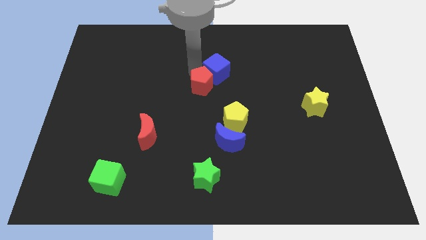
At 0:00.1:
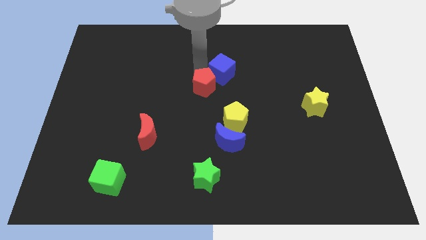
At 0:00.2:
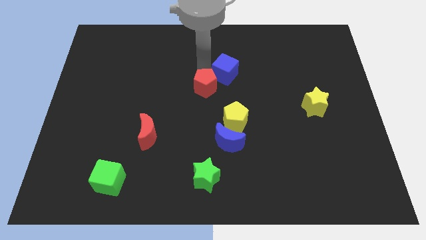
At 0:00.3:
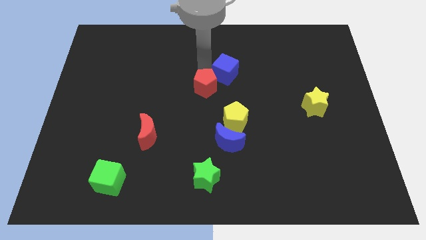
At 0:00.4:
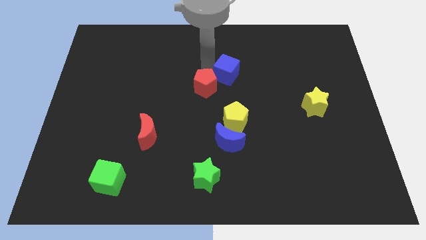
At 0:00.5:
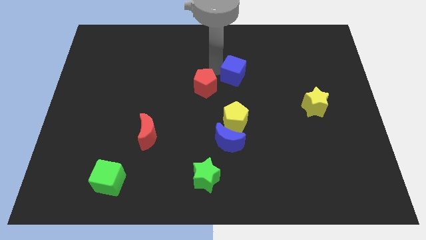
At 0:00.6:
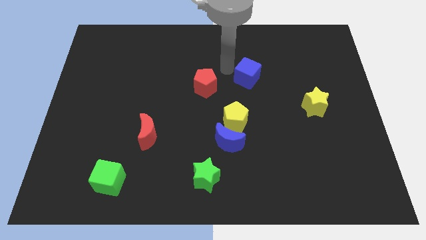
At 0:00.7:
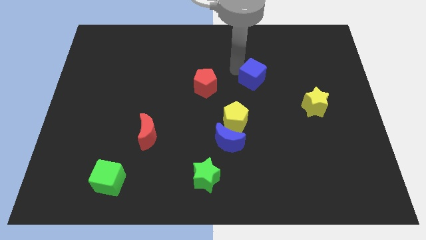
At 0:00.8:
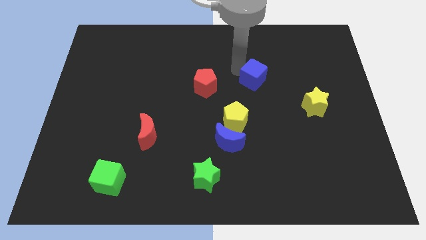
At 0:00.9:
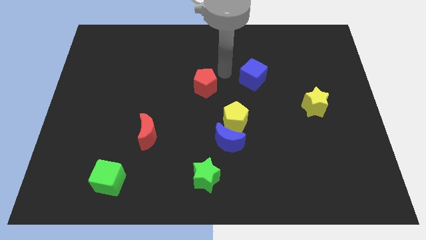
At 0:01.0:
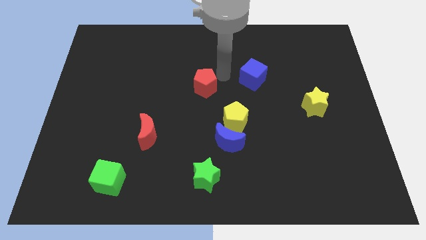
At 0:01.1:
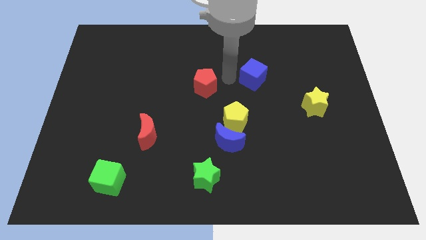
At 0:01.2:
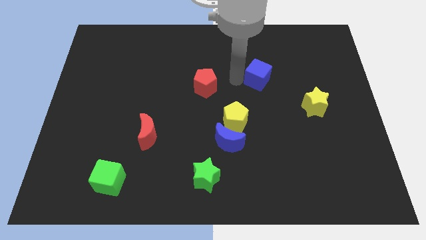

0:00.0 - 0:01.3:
separate blue cube from red pentagon

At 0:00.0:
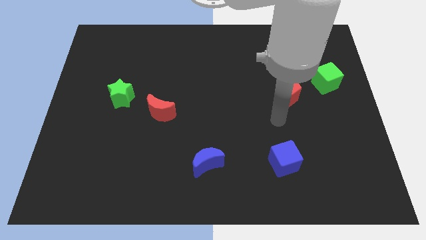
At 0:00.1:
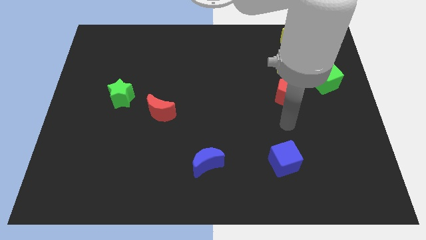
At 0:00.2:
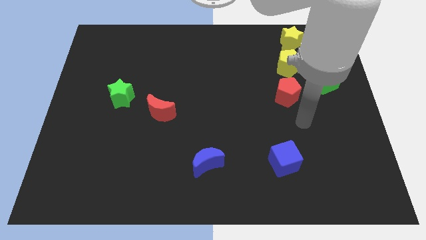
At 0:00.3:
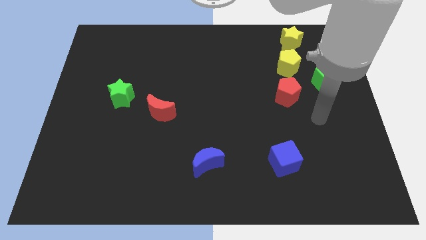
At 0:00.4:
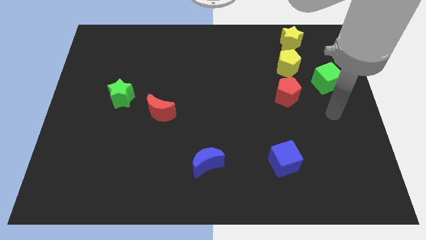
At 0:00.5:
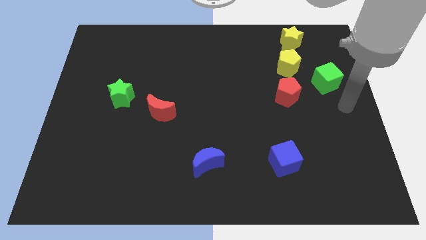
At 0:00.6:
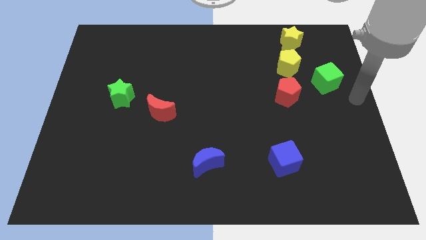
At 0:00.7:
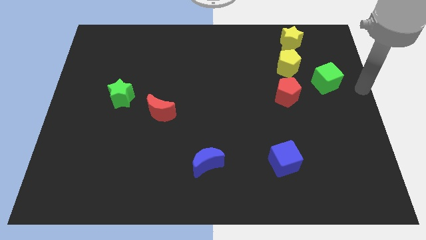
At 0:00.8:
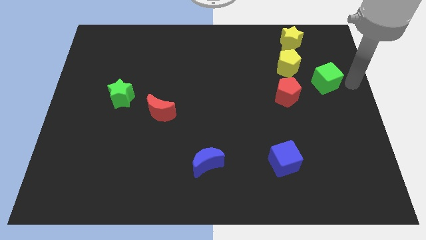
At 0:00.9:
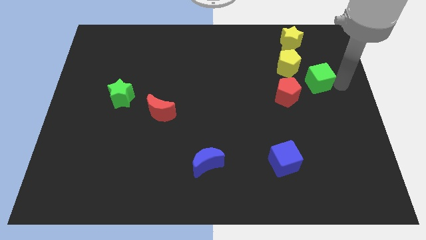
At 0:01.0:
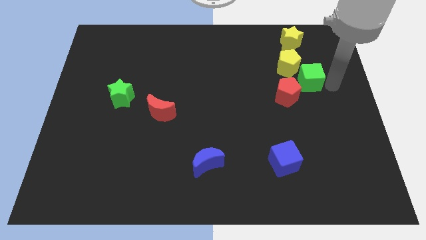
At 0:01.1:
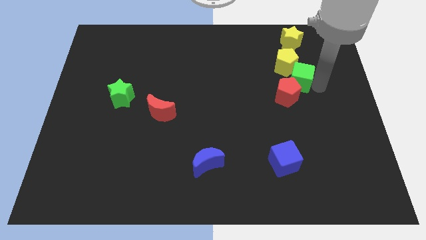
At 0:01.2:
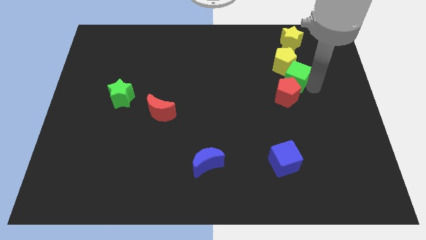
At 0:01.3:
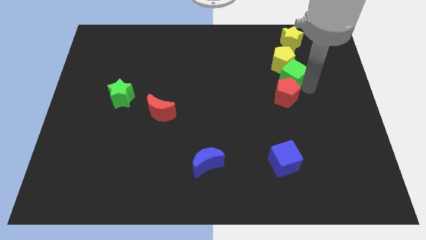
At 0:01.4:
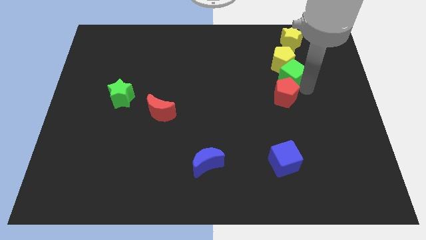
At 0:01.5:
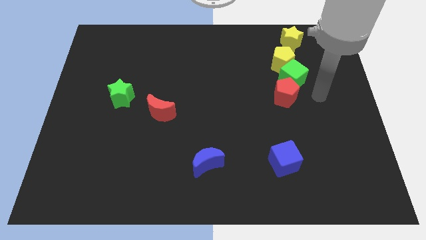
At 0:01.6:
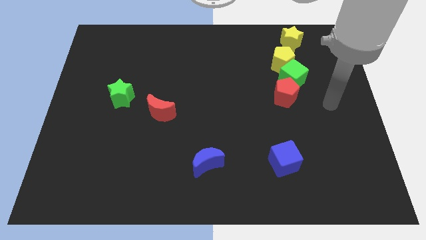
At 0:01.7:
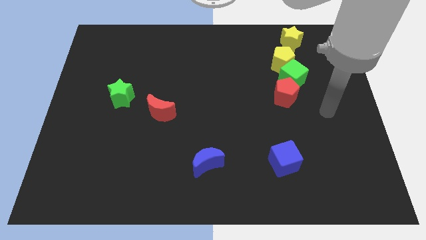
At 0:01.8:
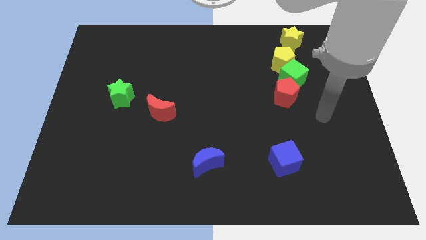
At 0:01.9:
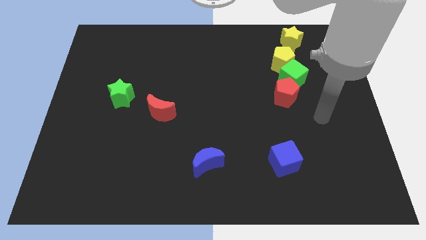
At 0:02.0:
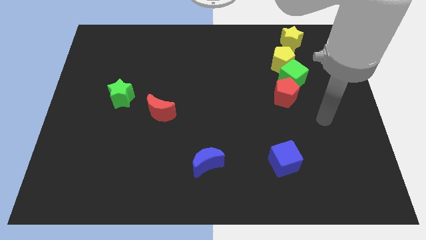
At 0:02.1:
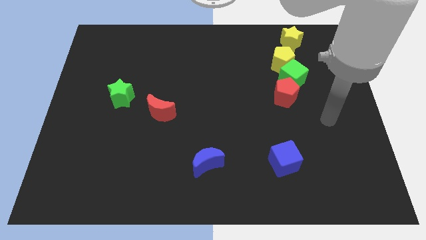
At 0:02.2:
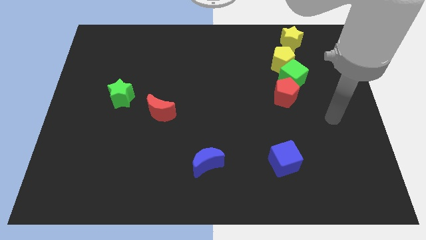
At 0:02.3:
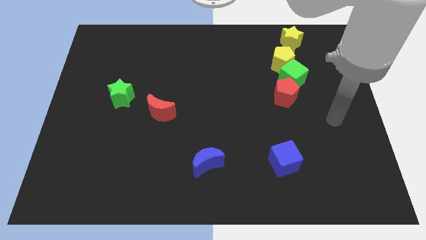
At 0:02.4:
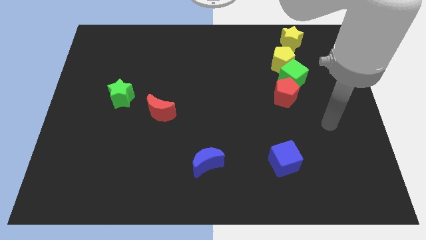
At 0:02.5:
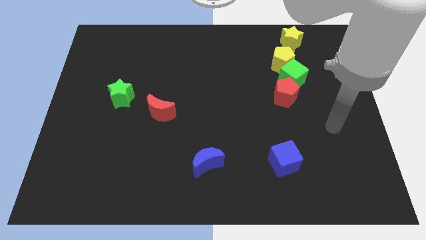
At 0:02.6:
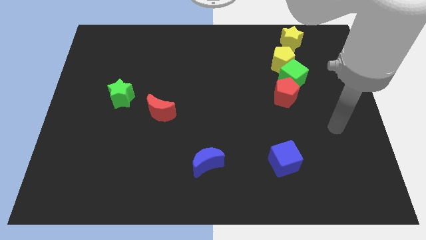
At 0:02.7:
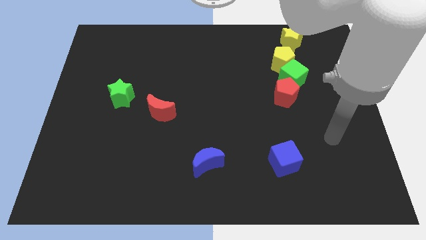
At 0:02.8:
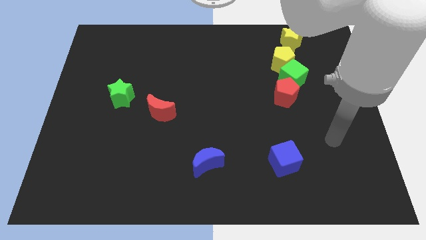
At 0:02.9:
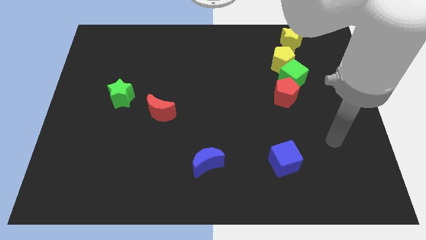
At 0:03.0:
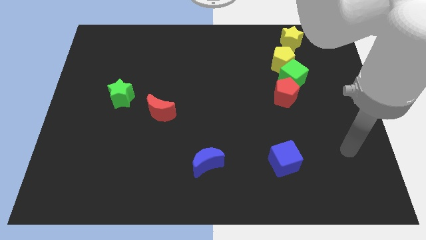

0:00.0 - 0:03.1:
move the green star towards the left

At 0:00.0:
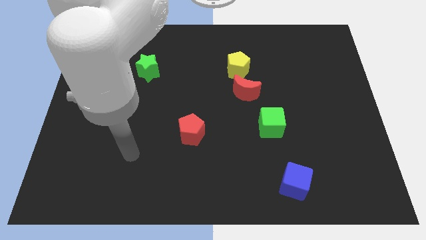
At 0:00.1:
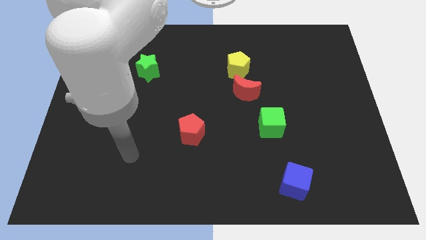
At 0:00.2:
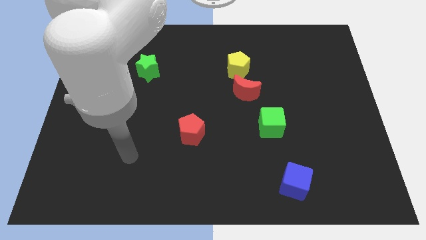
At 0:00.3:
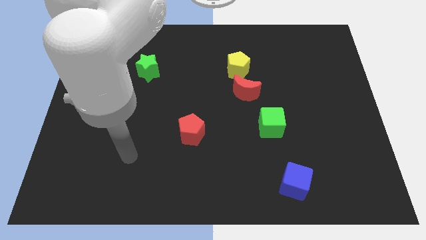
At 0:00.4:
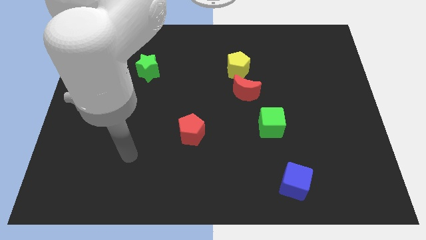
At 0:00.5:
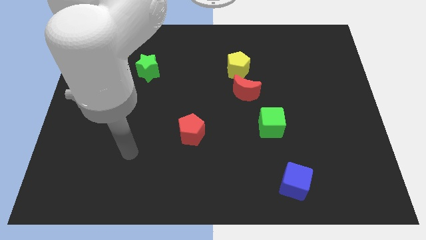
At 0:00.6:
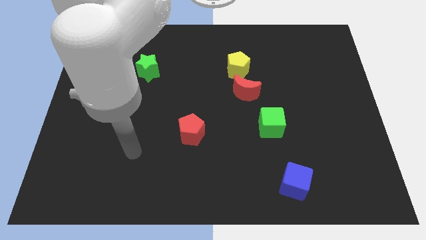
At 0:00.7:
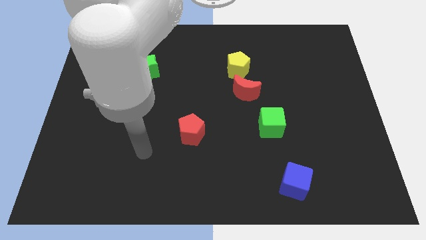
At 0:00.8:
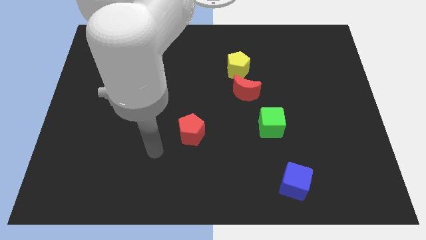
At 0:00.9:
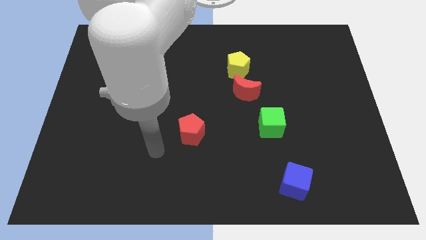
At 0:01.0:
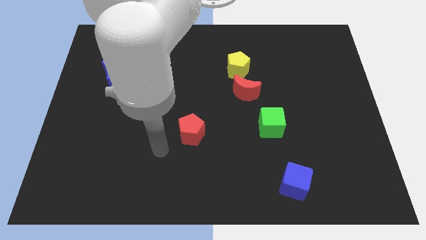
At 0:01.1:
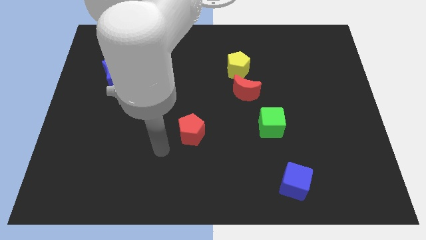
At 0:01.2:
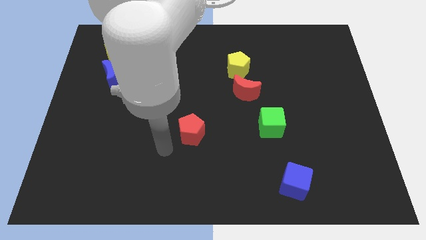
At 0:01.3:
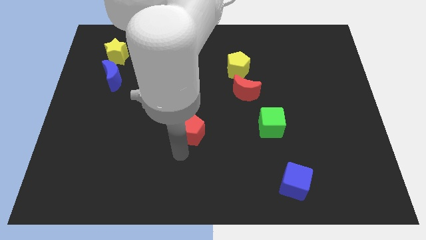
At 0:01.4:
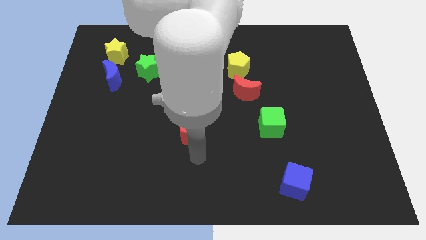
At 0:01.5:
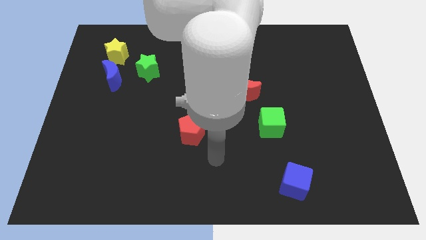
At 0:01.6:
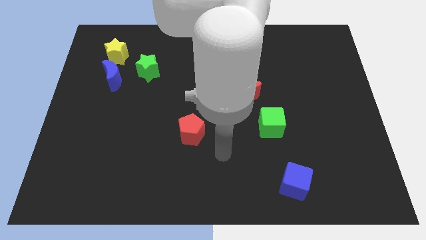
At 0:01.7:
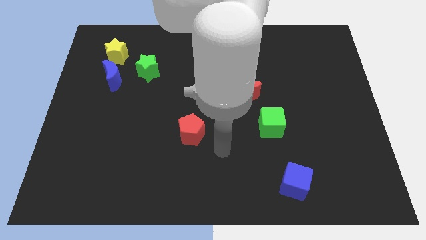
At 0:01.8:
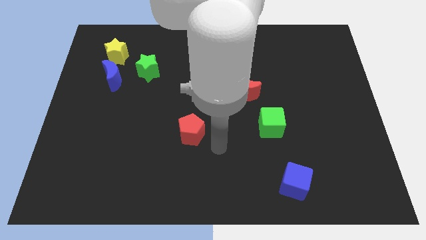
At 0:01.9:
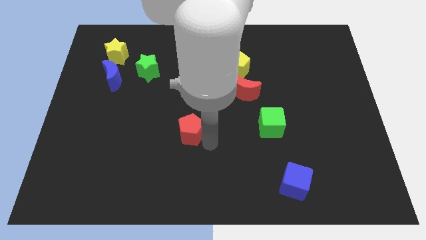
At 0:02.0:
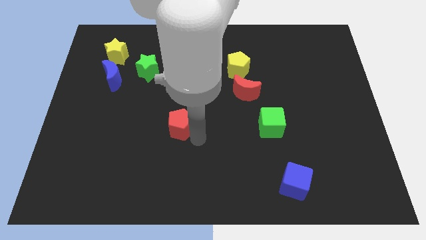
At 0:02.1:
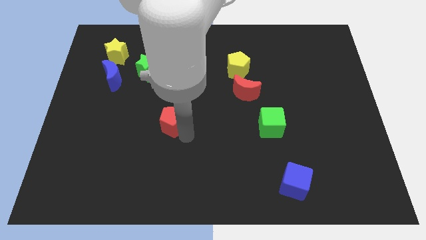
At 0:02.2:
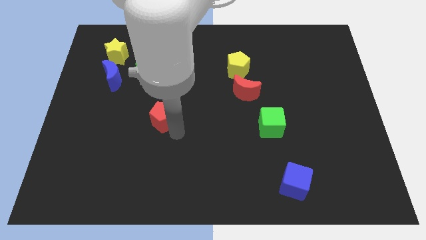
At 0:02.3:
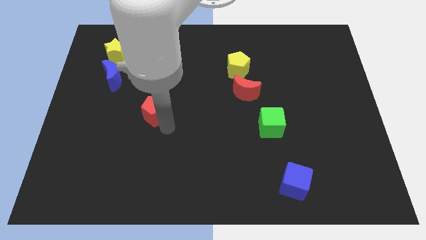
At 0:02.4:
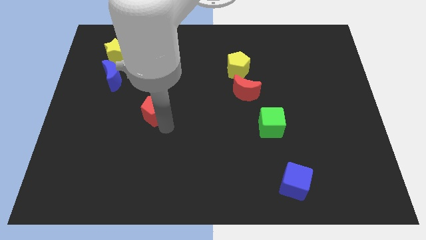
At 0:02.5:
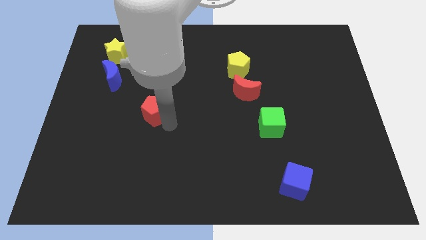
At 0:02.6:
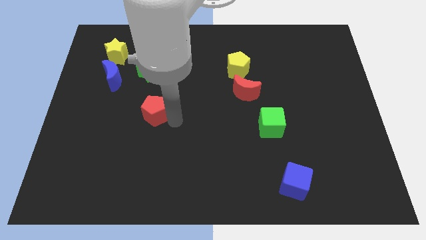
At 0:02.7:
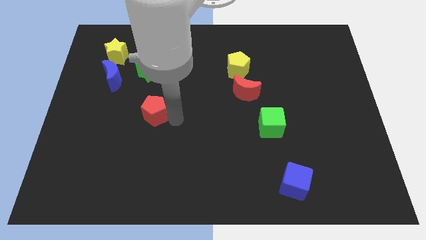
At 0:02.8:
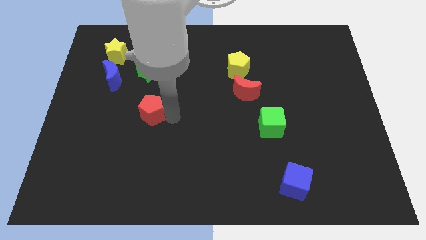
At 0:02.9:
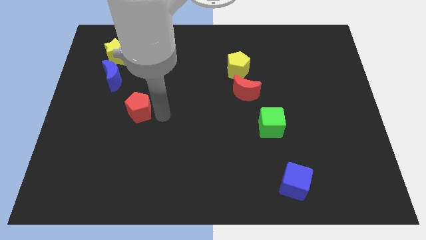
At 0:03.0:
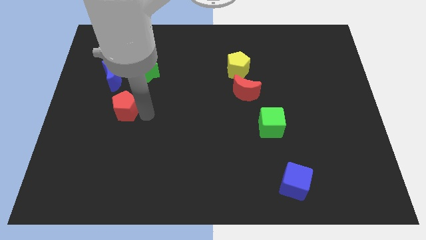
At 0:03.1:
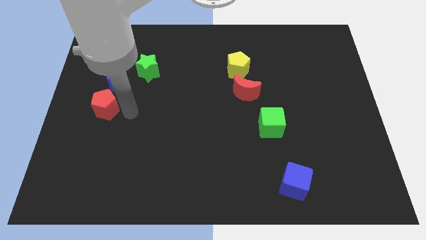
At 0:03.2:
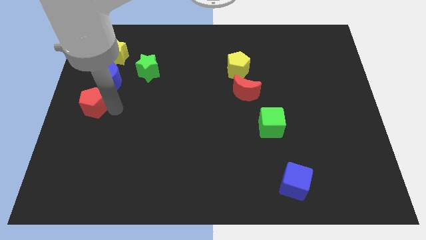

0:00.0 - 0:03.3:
slide the red pentagon to the left side of the board

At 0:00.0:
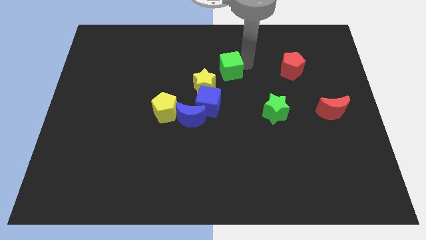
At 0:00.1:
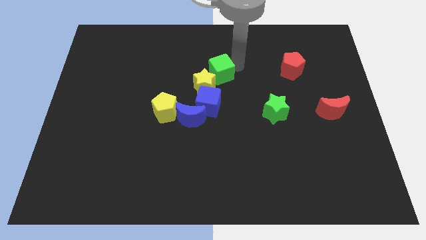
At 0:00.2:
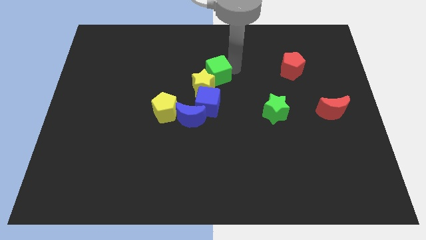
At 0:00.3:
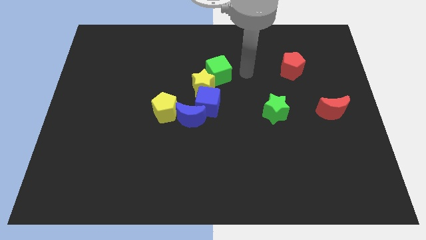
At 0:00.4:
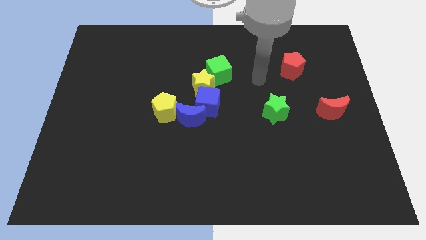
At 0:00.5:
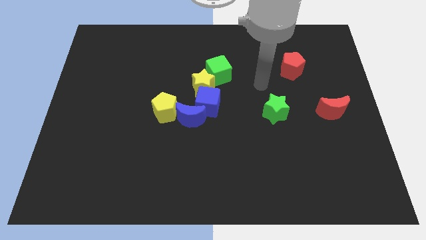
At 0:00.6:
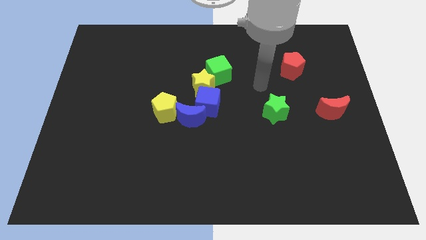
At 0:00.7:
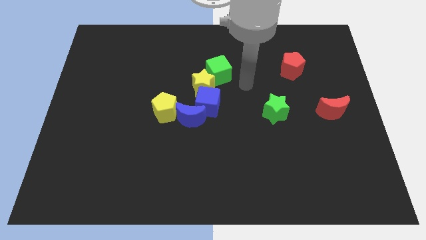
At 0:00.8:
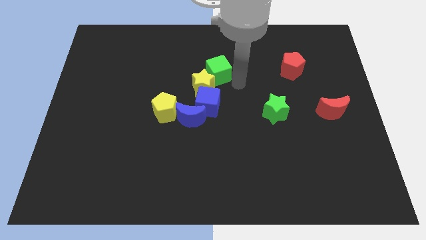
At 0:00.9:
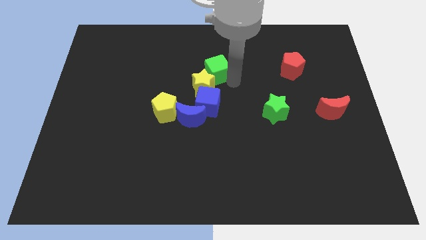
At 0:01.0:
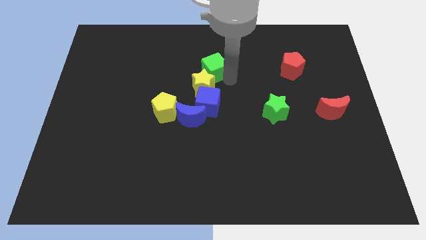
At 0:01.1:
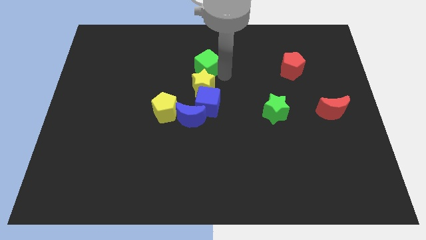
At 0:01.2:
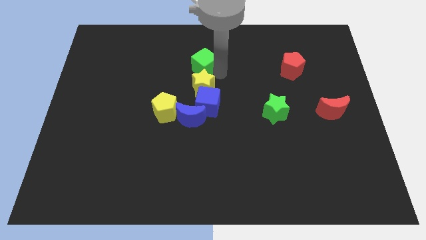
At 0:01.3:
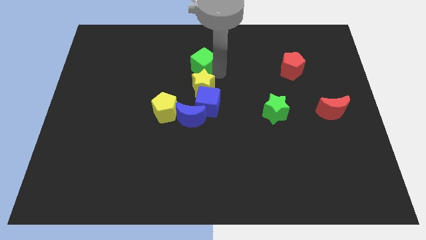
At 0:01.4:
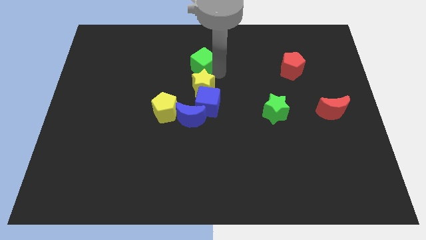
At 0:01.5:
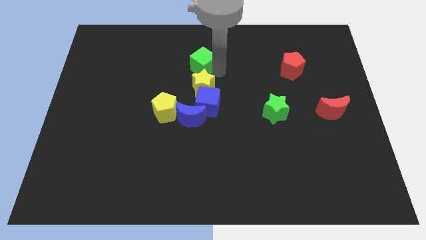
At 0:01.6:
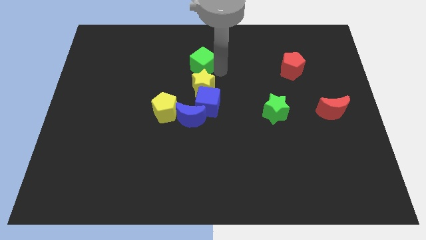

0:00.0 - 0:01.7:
place the green cube above the yellow star
